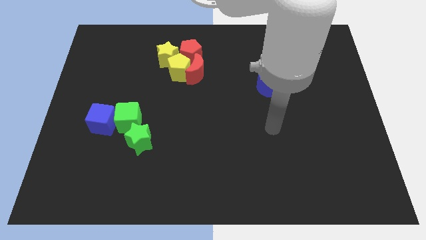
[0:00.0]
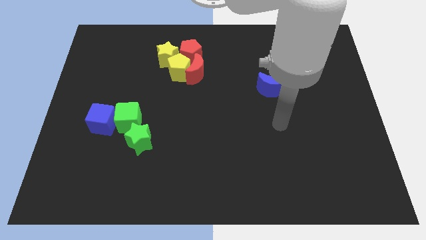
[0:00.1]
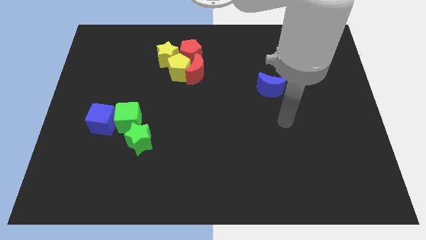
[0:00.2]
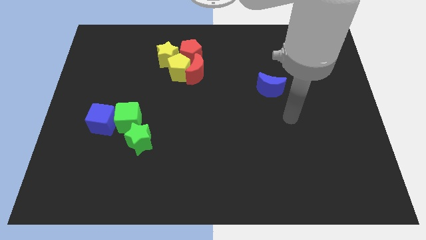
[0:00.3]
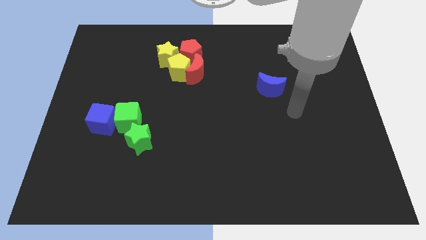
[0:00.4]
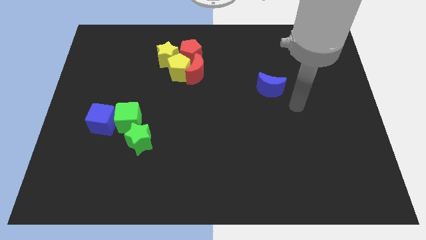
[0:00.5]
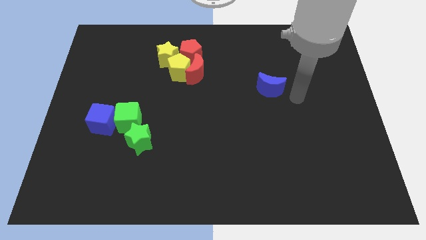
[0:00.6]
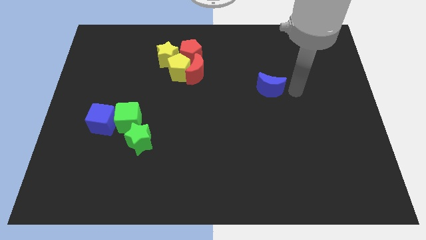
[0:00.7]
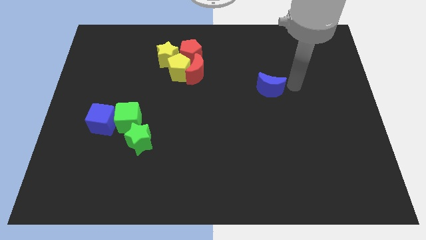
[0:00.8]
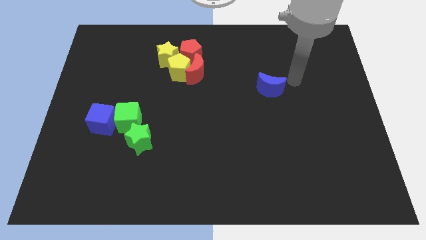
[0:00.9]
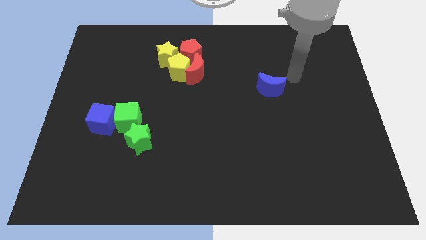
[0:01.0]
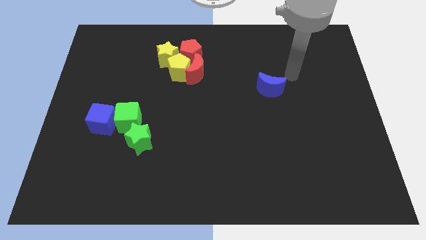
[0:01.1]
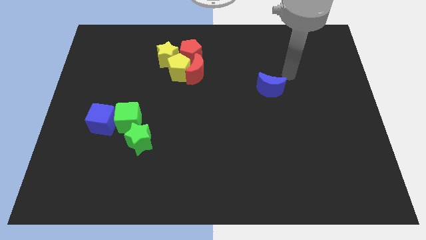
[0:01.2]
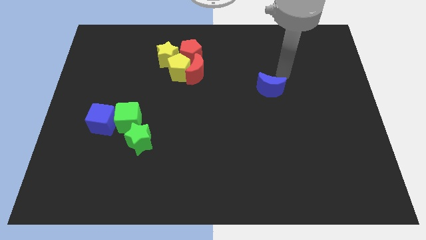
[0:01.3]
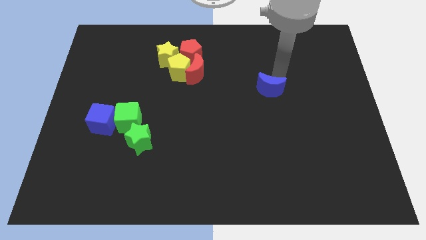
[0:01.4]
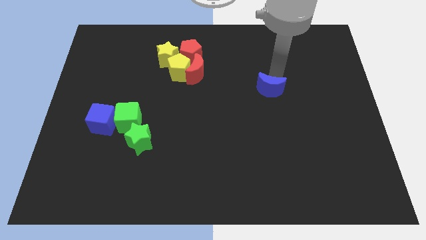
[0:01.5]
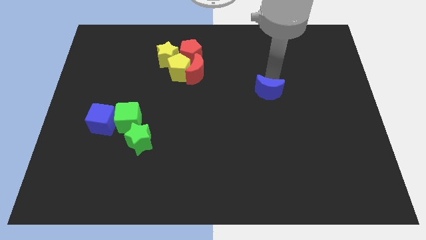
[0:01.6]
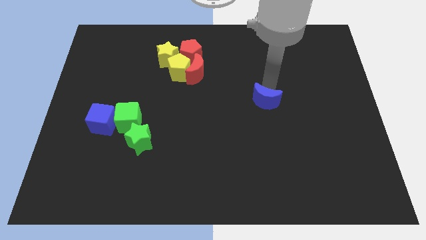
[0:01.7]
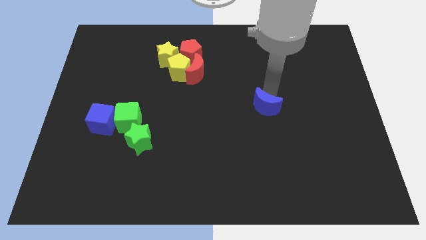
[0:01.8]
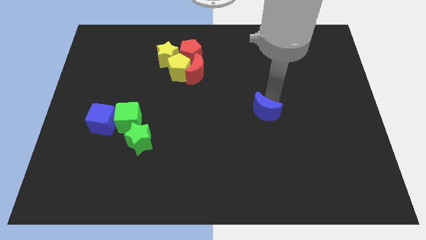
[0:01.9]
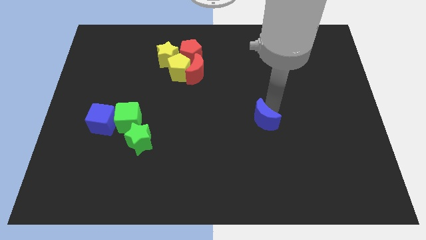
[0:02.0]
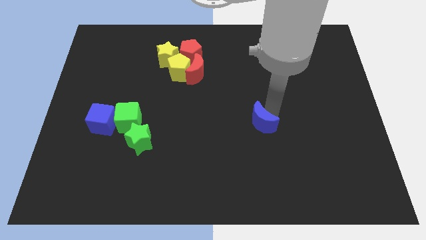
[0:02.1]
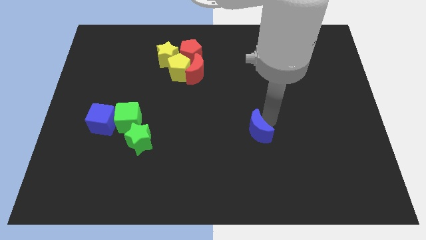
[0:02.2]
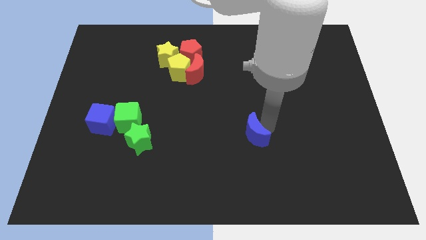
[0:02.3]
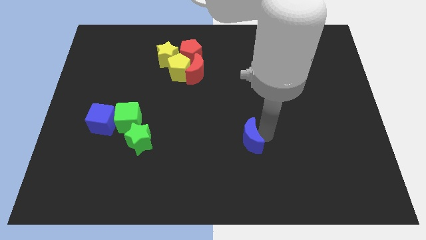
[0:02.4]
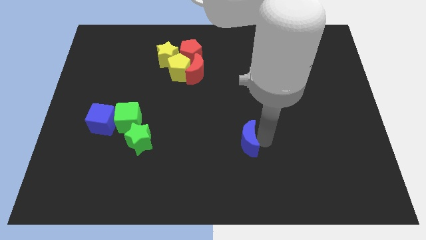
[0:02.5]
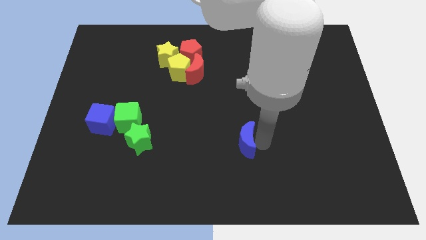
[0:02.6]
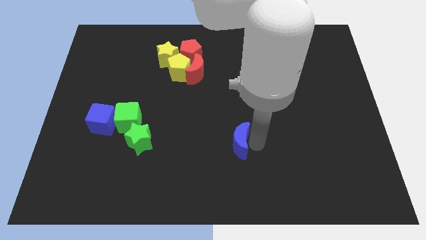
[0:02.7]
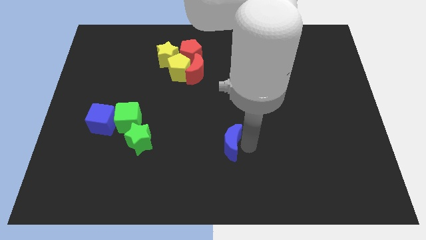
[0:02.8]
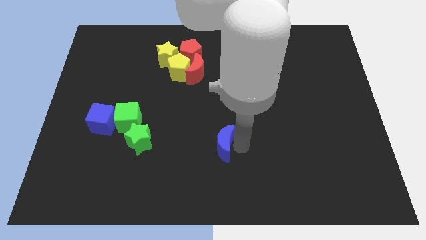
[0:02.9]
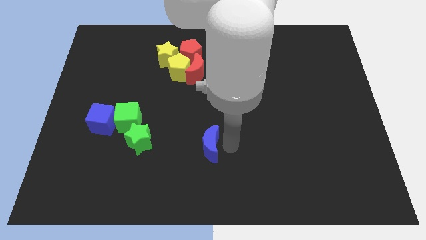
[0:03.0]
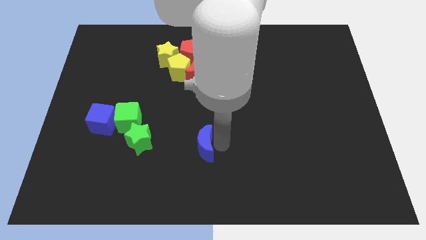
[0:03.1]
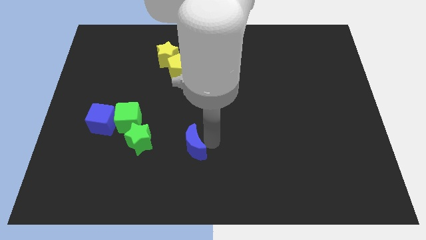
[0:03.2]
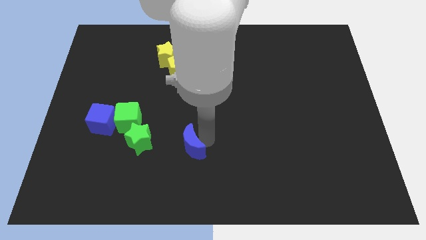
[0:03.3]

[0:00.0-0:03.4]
move the blue crescent to the left of the green star

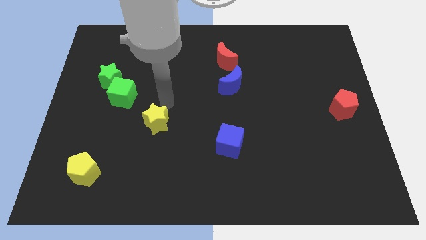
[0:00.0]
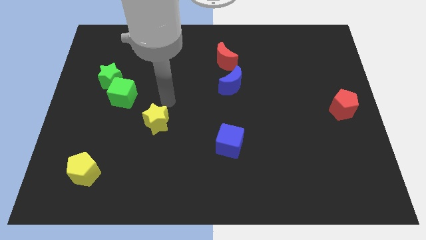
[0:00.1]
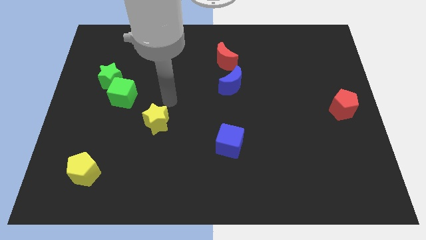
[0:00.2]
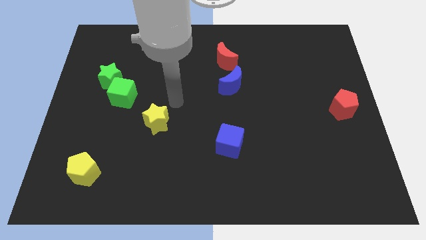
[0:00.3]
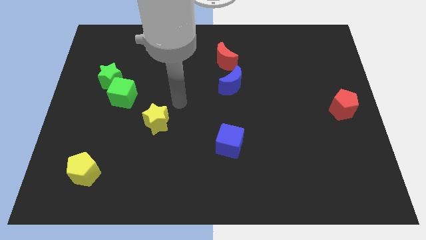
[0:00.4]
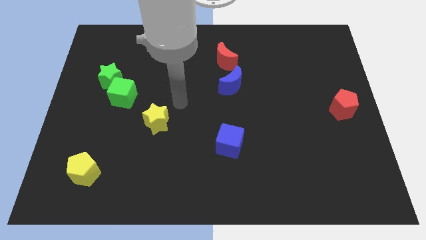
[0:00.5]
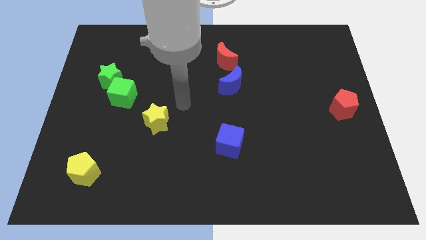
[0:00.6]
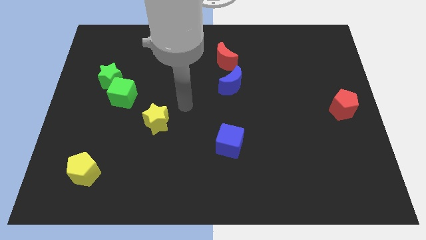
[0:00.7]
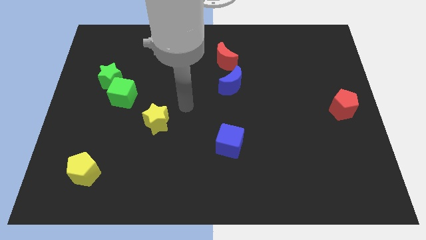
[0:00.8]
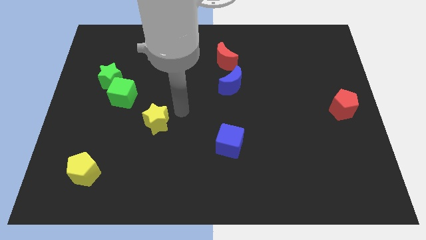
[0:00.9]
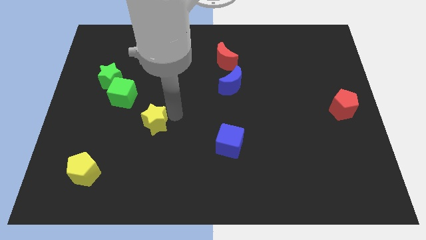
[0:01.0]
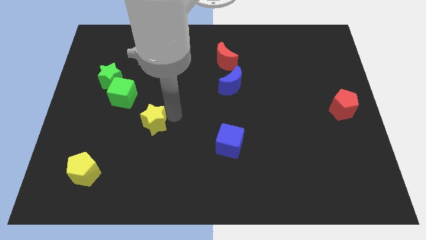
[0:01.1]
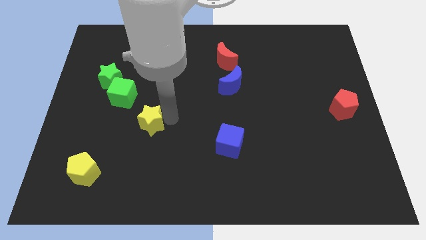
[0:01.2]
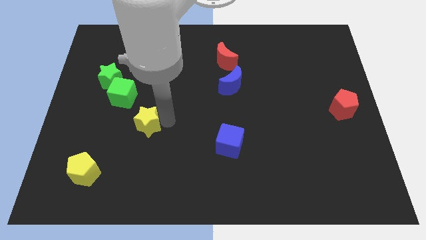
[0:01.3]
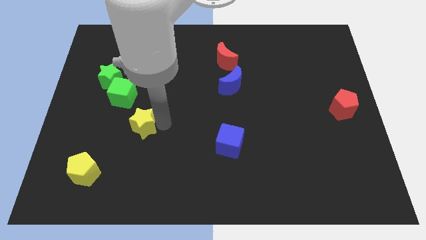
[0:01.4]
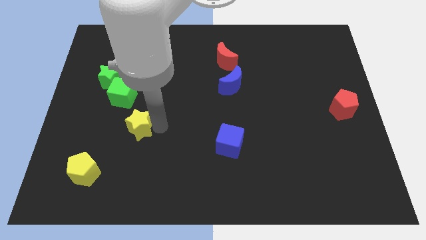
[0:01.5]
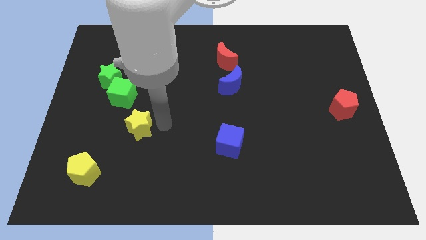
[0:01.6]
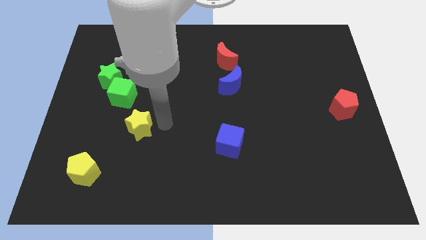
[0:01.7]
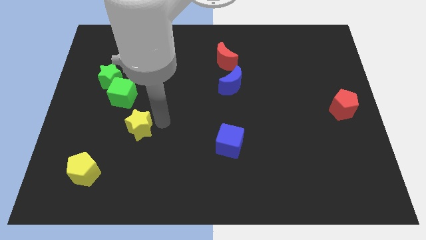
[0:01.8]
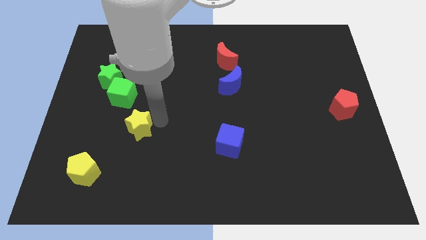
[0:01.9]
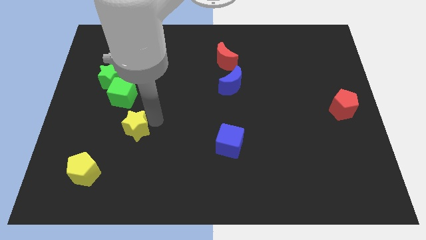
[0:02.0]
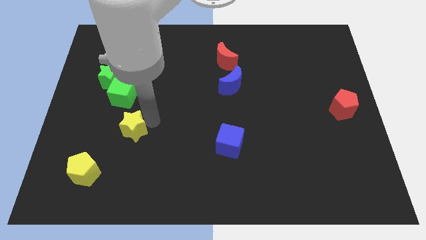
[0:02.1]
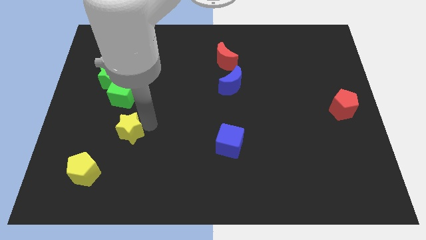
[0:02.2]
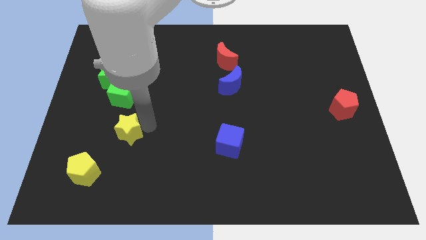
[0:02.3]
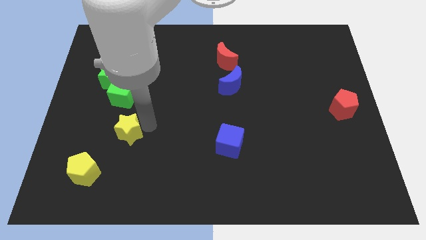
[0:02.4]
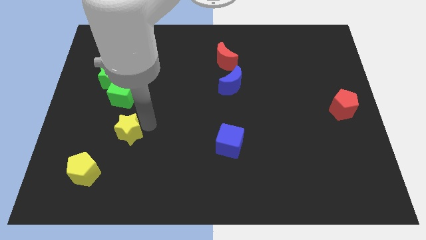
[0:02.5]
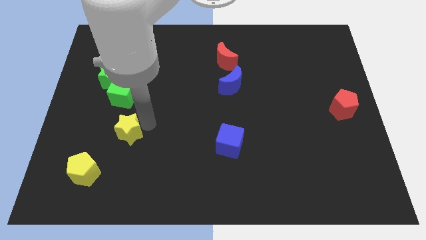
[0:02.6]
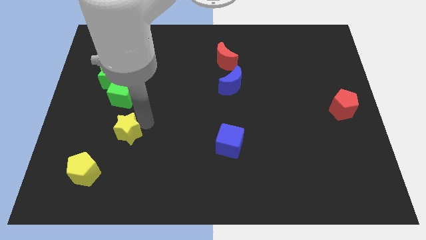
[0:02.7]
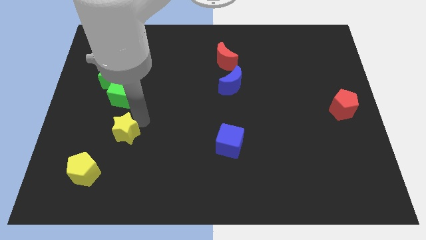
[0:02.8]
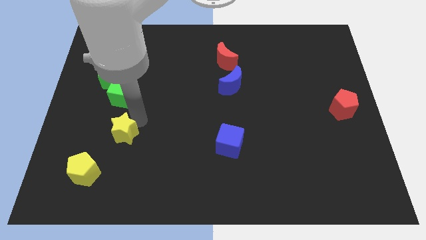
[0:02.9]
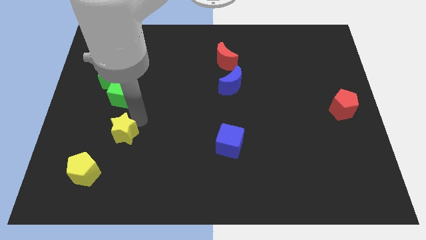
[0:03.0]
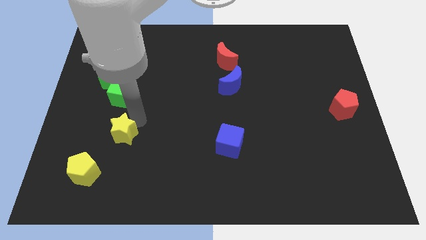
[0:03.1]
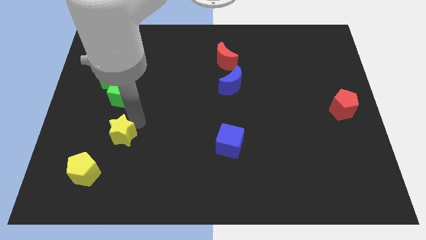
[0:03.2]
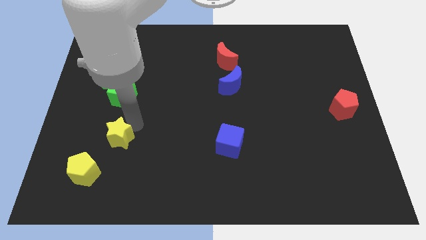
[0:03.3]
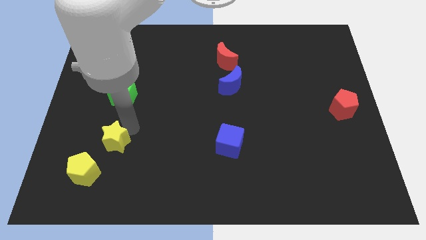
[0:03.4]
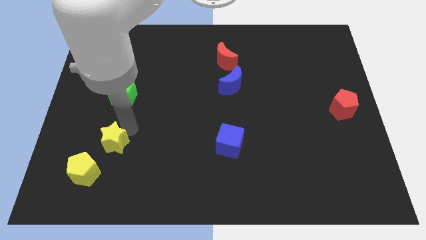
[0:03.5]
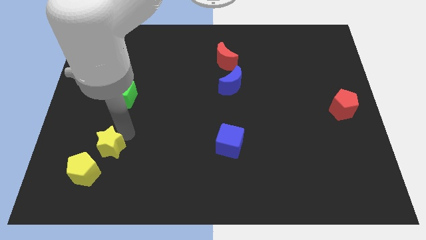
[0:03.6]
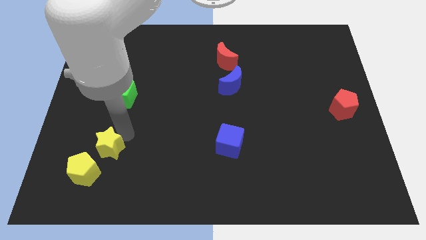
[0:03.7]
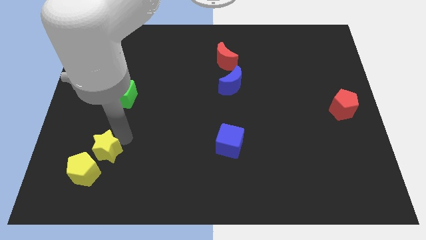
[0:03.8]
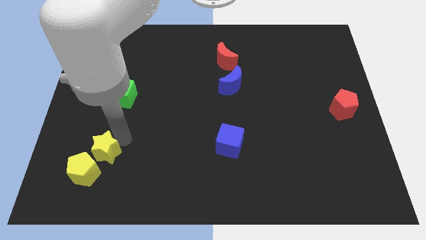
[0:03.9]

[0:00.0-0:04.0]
put the yellow star vertically below the green cube

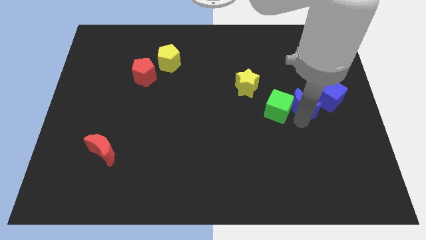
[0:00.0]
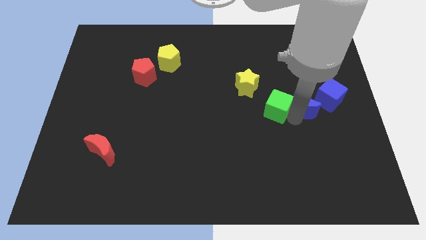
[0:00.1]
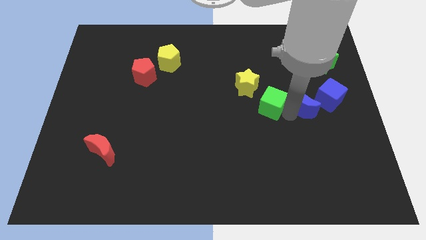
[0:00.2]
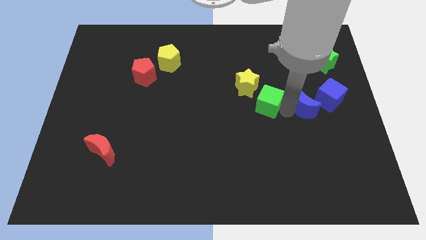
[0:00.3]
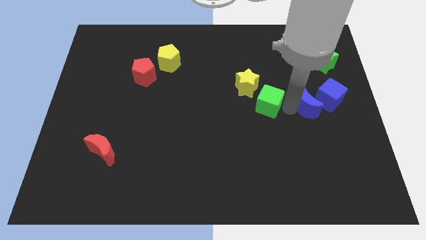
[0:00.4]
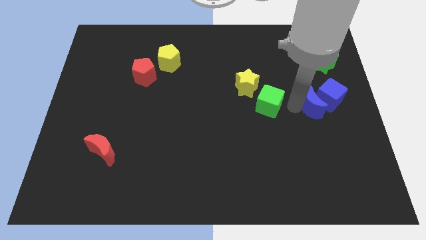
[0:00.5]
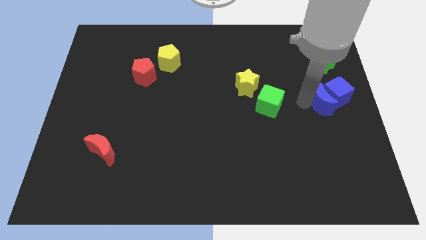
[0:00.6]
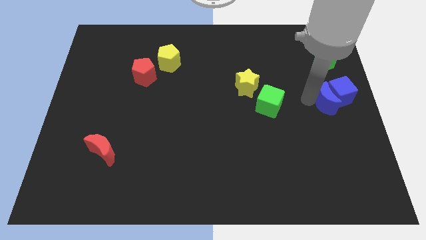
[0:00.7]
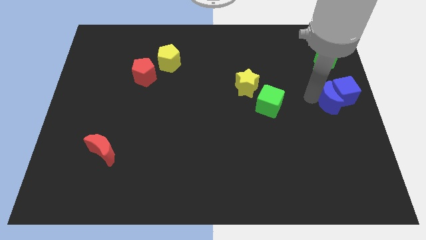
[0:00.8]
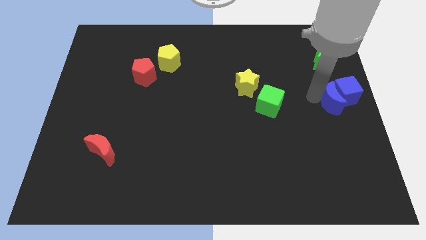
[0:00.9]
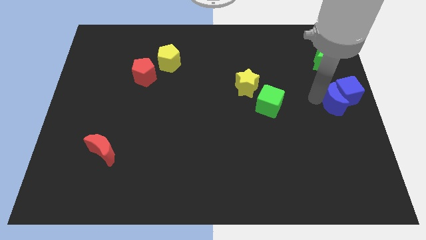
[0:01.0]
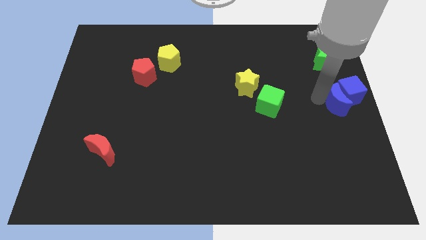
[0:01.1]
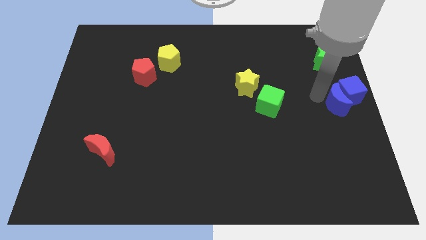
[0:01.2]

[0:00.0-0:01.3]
push the blue moon into blue cube

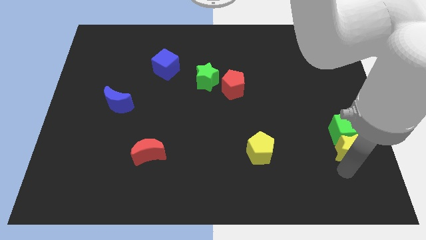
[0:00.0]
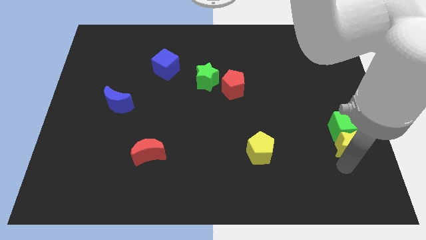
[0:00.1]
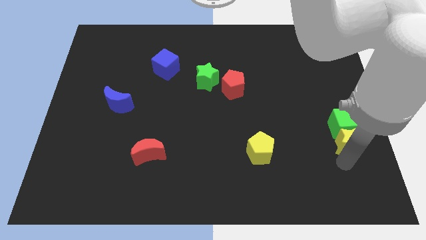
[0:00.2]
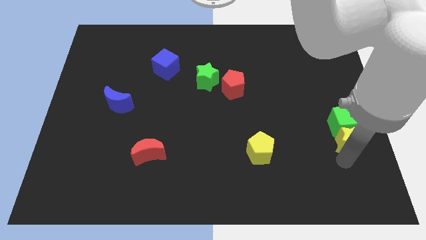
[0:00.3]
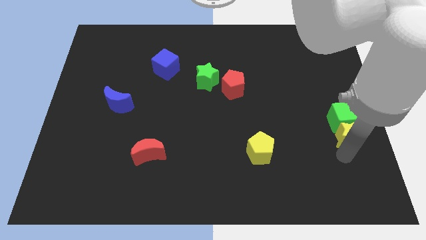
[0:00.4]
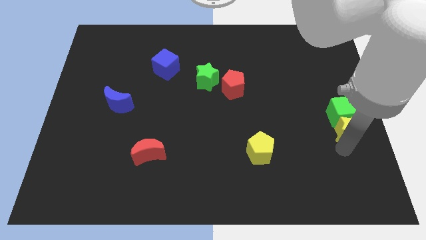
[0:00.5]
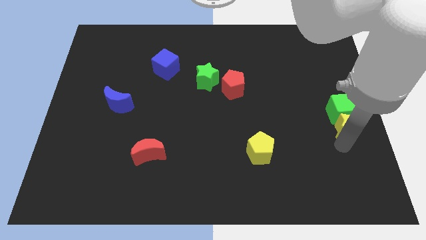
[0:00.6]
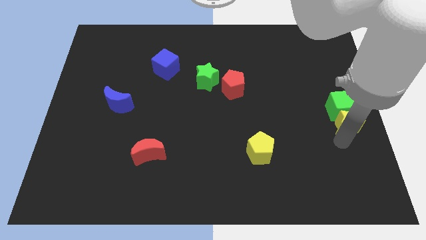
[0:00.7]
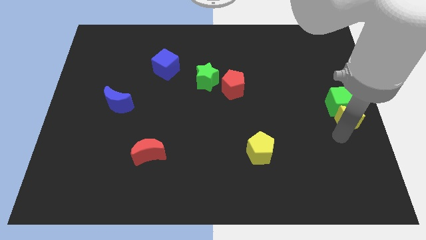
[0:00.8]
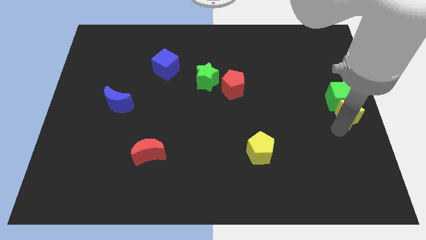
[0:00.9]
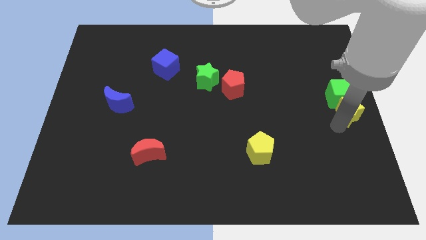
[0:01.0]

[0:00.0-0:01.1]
move the yellow star along with the green cube to the right center of the board
